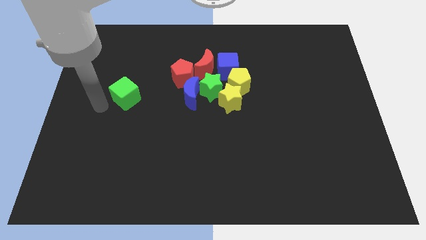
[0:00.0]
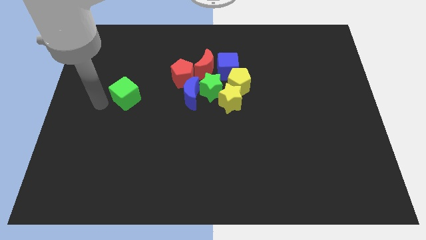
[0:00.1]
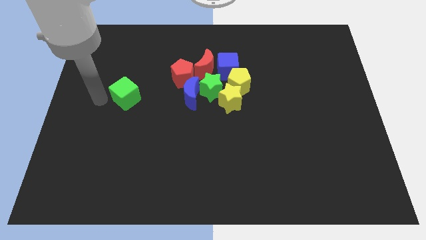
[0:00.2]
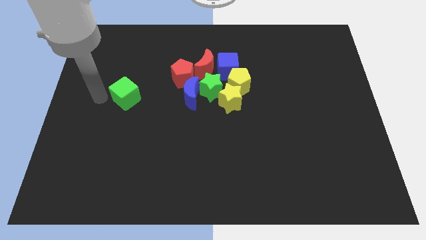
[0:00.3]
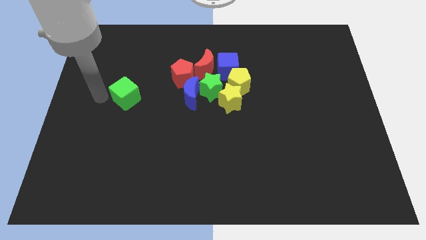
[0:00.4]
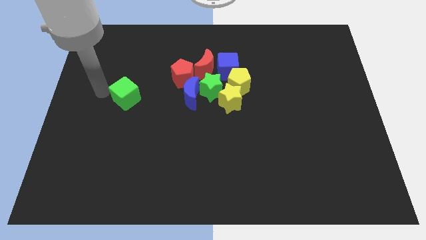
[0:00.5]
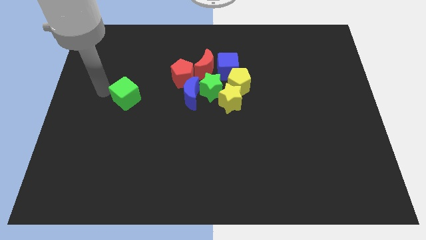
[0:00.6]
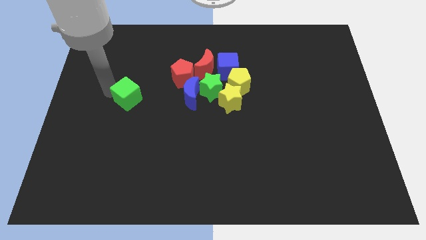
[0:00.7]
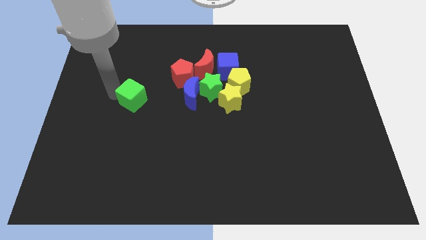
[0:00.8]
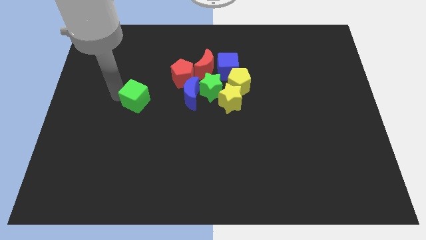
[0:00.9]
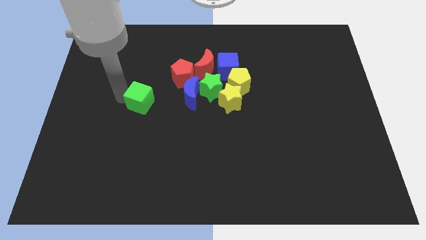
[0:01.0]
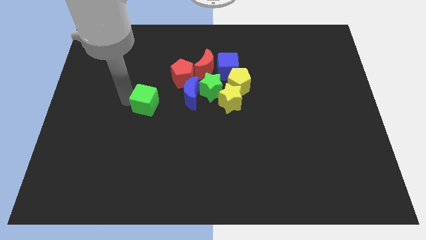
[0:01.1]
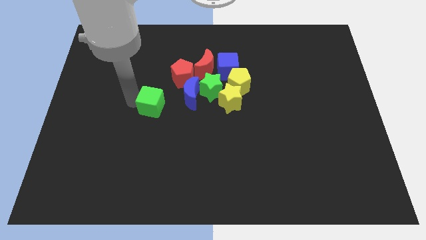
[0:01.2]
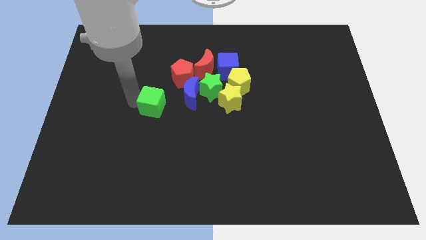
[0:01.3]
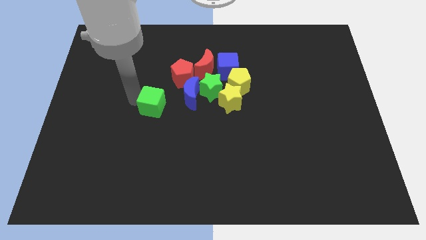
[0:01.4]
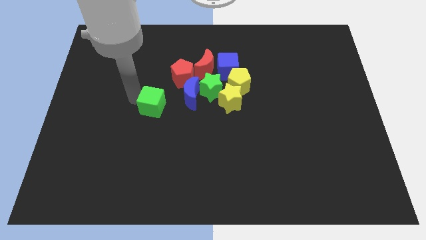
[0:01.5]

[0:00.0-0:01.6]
take the green cube towards the blue crescent

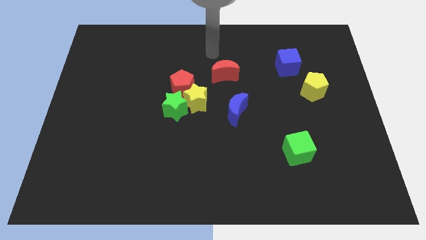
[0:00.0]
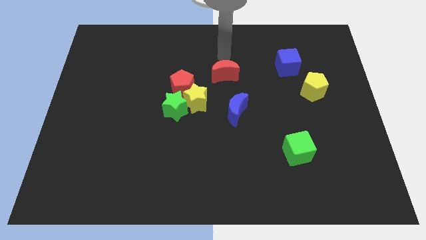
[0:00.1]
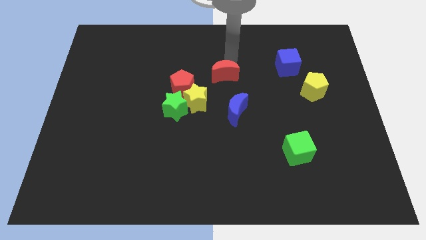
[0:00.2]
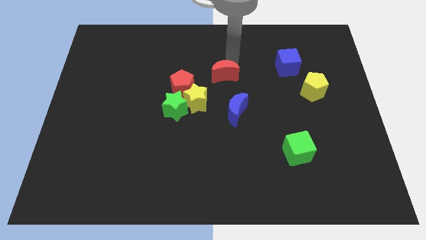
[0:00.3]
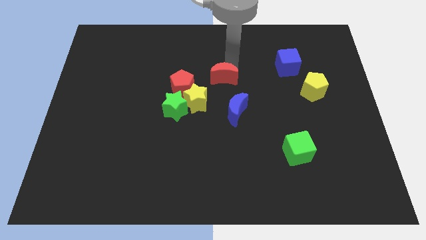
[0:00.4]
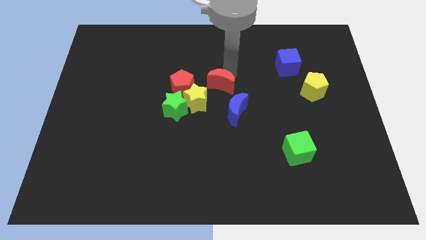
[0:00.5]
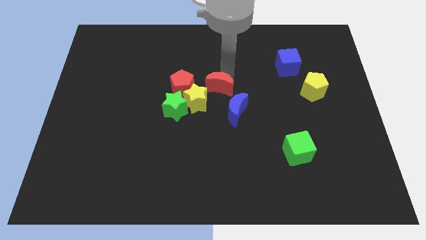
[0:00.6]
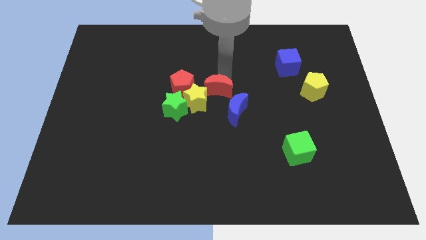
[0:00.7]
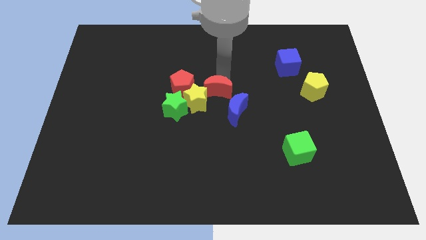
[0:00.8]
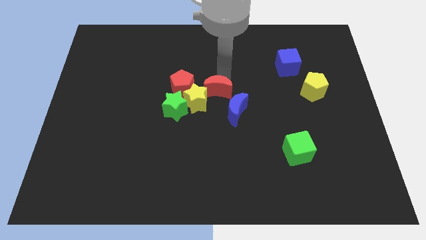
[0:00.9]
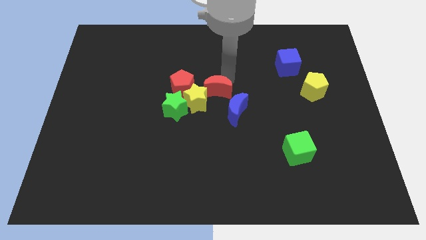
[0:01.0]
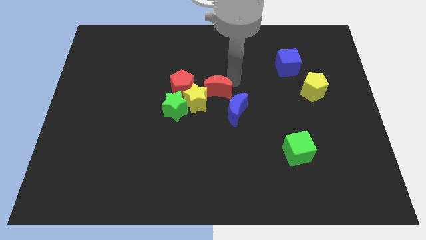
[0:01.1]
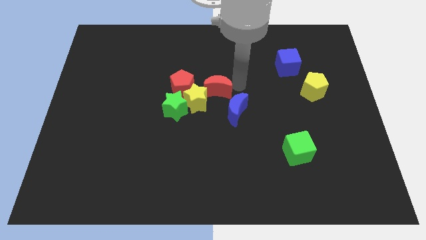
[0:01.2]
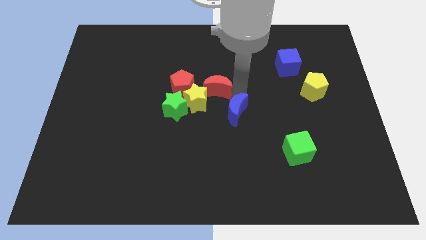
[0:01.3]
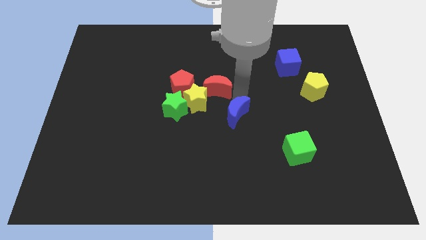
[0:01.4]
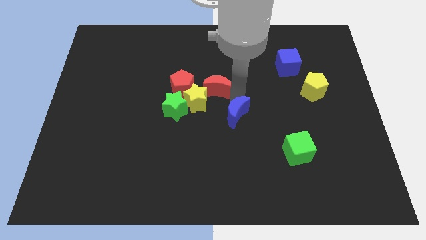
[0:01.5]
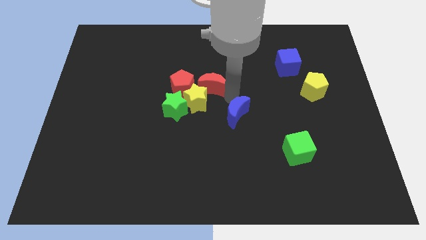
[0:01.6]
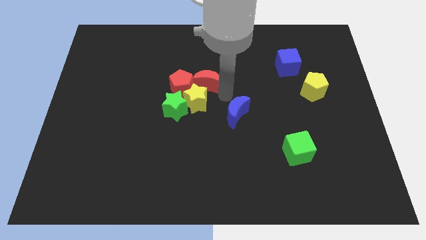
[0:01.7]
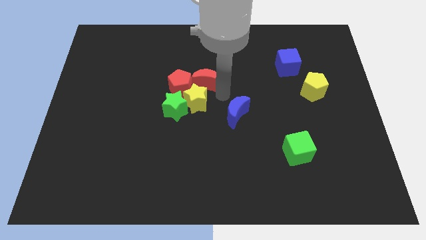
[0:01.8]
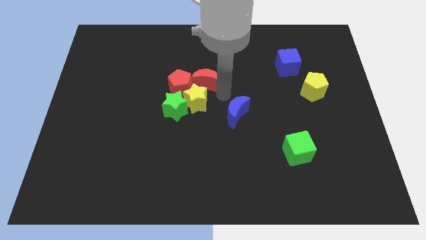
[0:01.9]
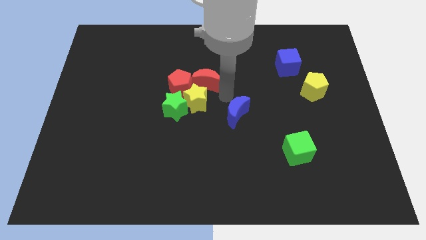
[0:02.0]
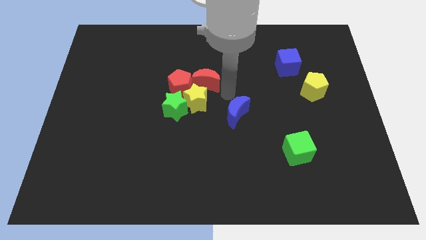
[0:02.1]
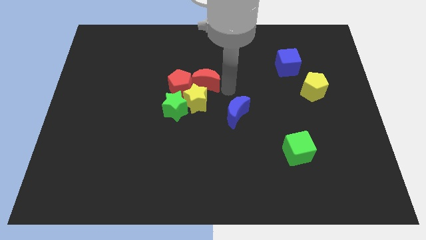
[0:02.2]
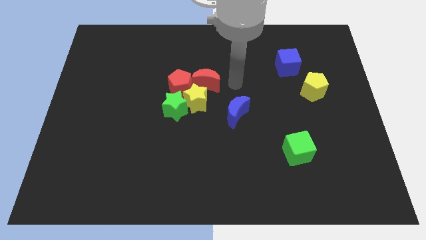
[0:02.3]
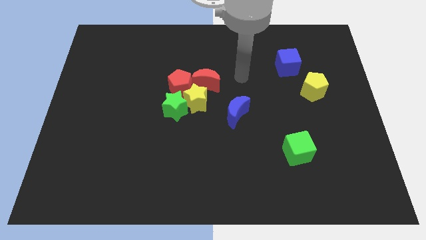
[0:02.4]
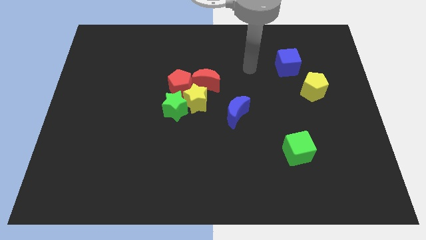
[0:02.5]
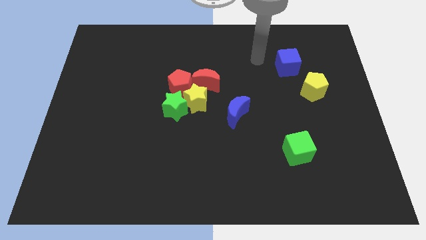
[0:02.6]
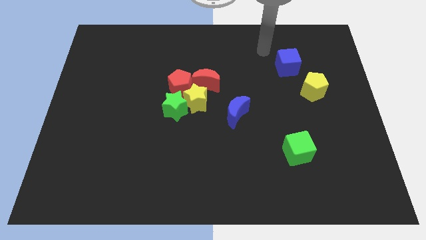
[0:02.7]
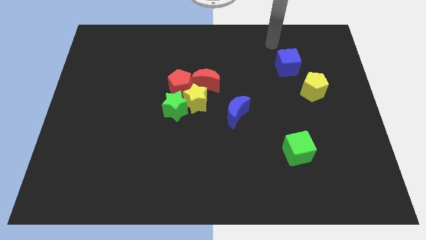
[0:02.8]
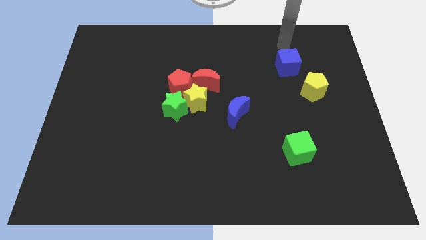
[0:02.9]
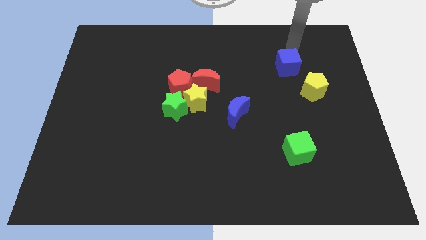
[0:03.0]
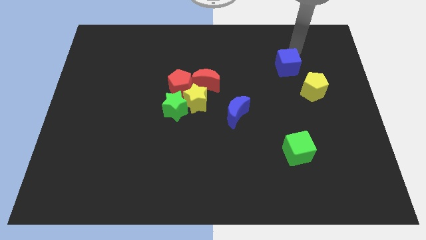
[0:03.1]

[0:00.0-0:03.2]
push red moon towards red pentagon

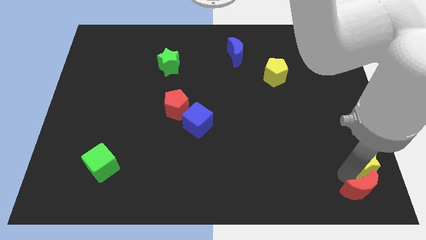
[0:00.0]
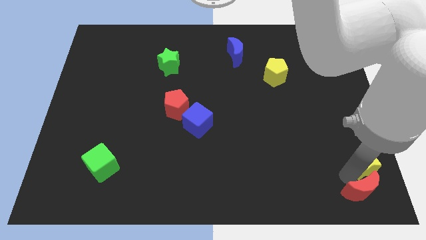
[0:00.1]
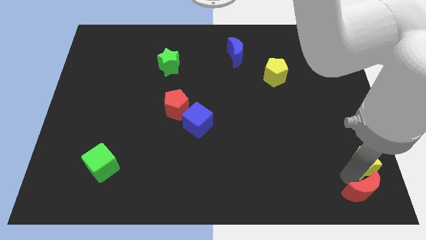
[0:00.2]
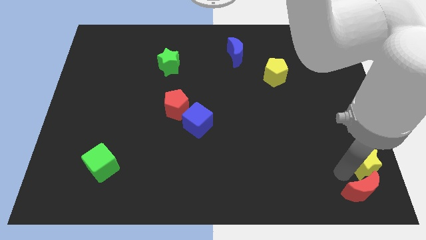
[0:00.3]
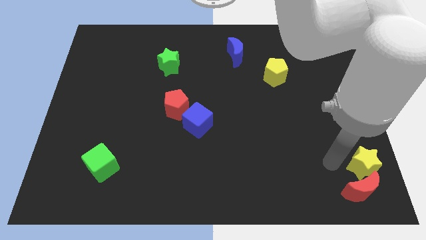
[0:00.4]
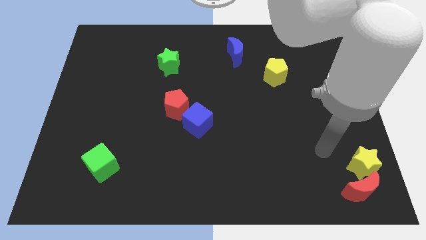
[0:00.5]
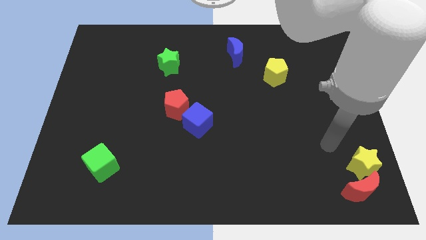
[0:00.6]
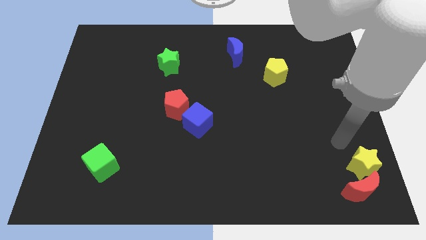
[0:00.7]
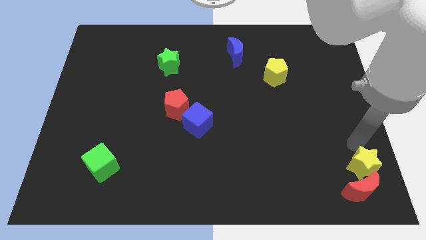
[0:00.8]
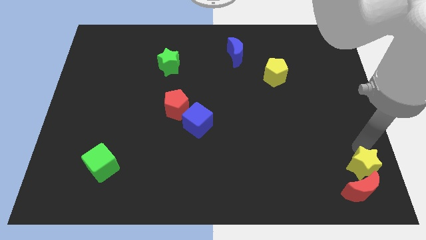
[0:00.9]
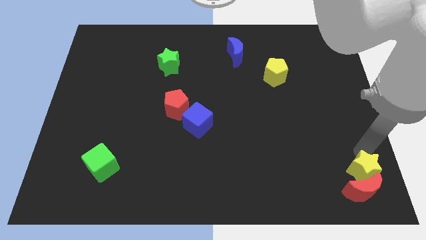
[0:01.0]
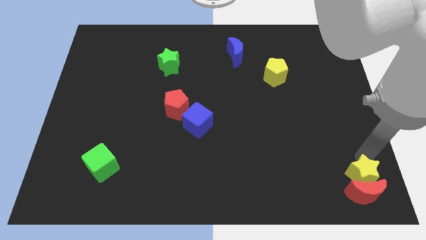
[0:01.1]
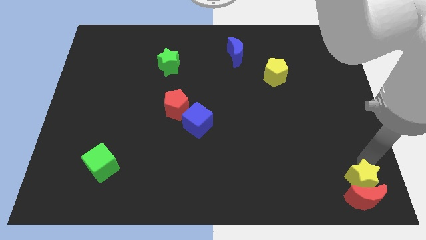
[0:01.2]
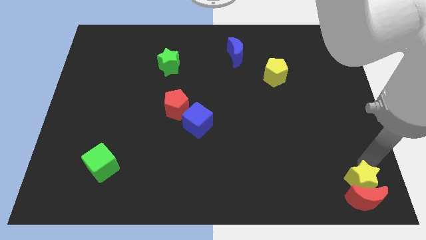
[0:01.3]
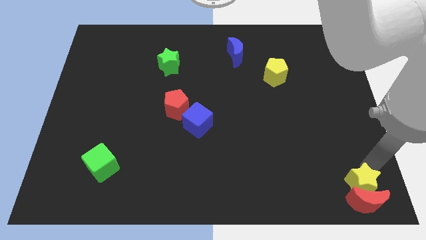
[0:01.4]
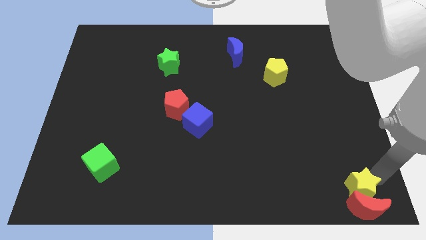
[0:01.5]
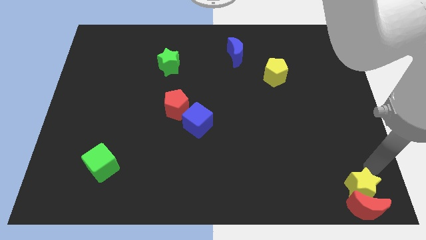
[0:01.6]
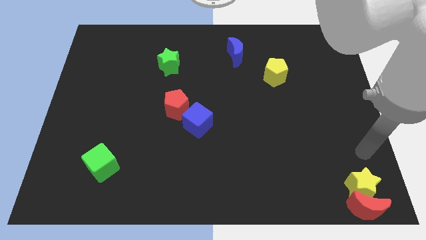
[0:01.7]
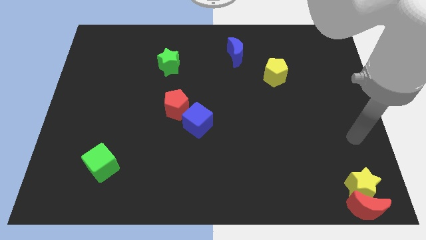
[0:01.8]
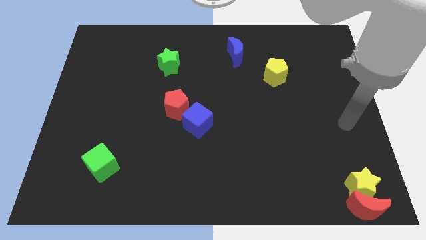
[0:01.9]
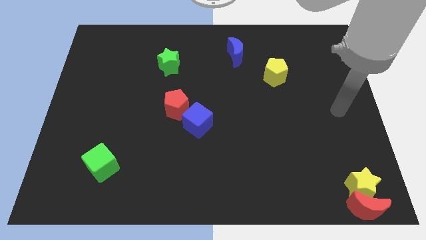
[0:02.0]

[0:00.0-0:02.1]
push the yellow star close to the red moon

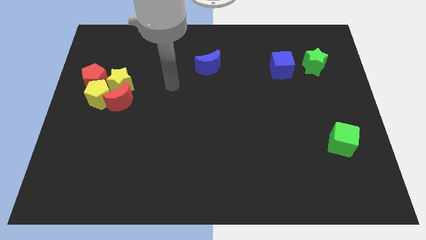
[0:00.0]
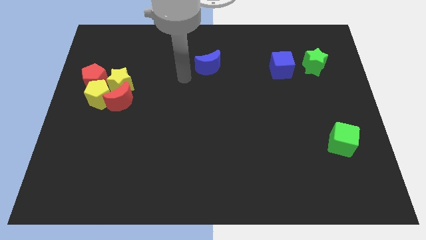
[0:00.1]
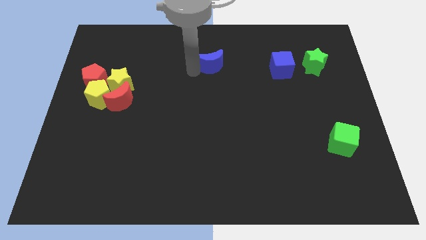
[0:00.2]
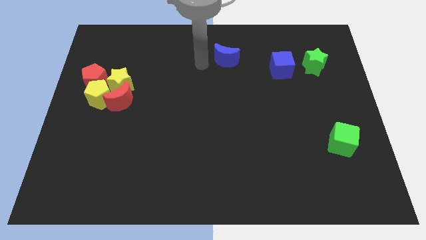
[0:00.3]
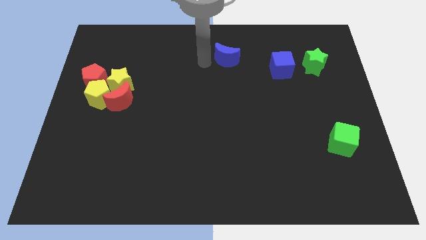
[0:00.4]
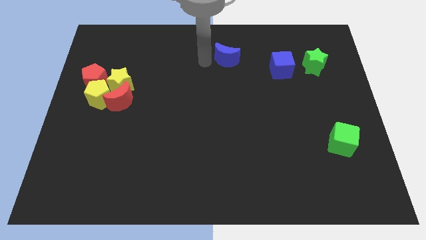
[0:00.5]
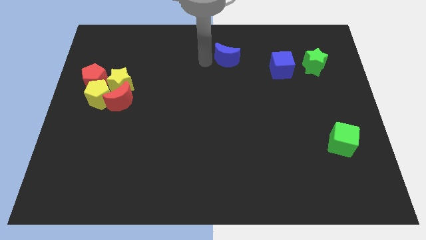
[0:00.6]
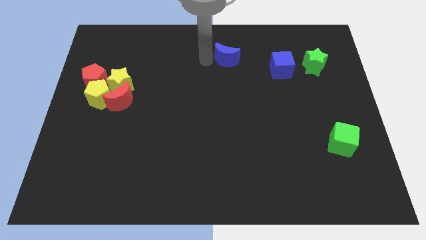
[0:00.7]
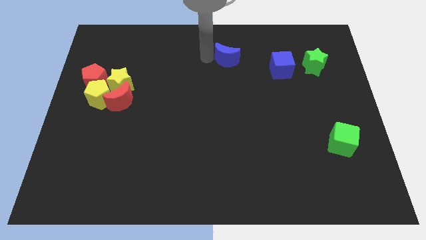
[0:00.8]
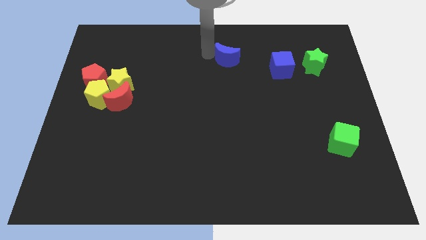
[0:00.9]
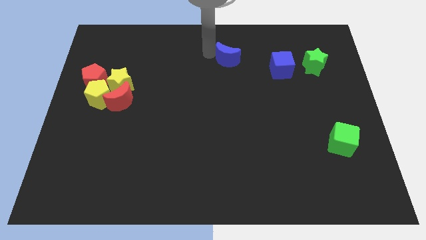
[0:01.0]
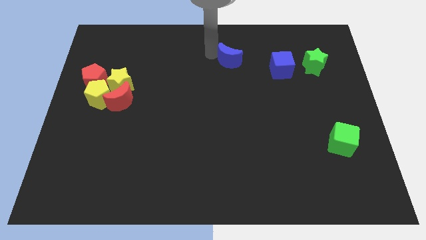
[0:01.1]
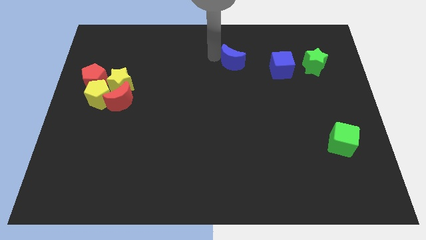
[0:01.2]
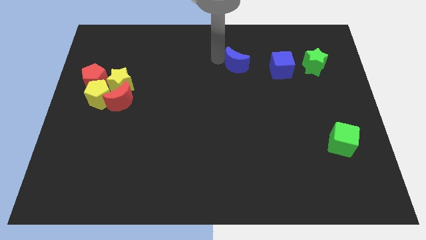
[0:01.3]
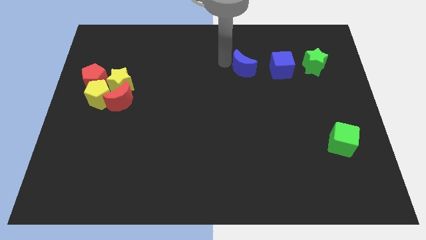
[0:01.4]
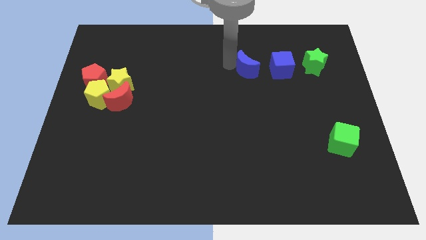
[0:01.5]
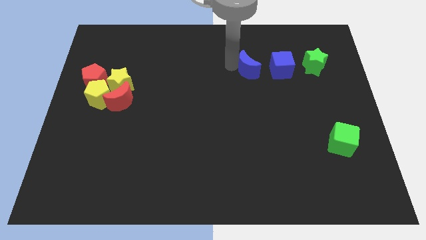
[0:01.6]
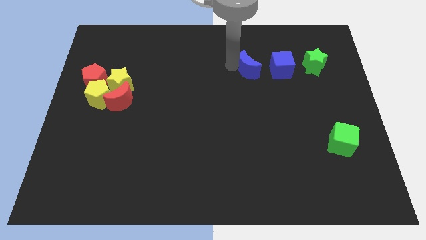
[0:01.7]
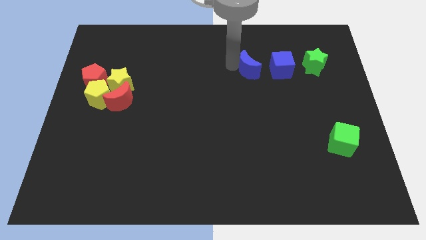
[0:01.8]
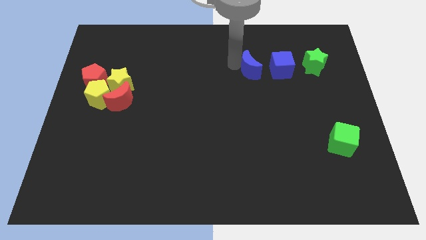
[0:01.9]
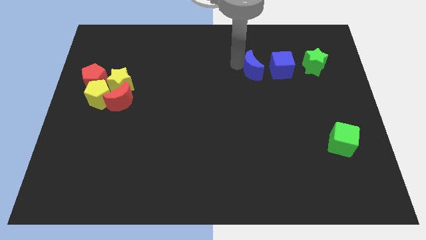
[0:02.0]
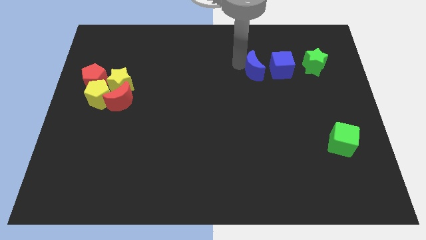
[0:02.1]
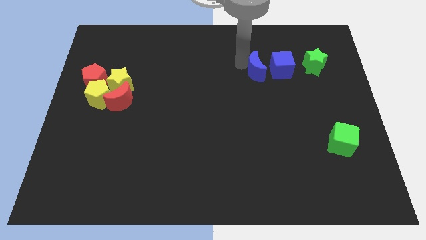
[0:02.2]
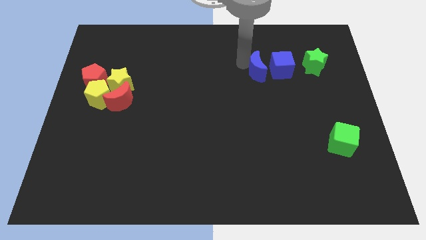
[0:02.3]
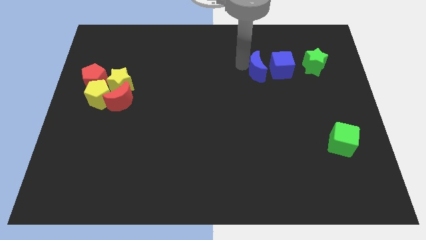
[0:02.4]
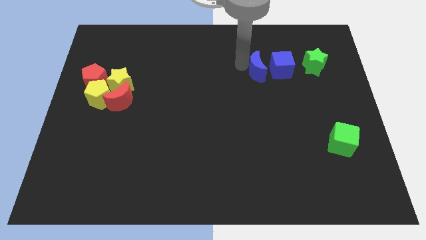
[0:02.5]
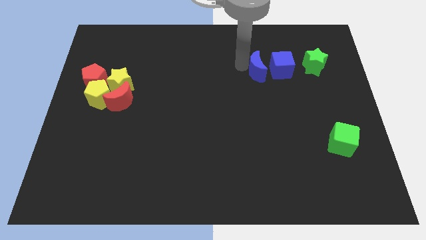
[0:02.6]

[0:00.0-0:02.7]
move the blue crescent towards the blue cube
